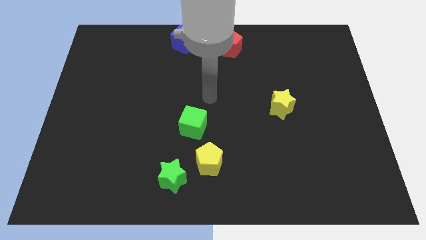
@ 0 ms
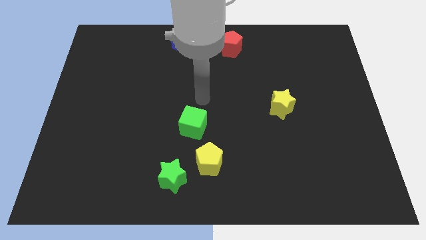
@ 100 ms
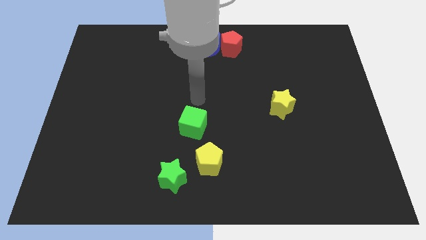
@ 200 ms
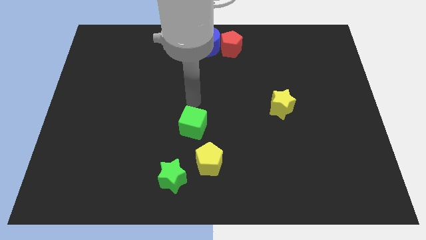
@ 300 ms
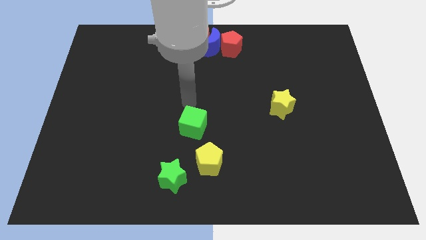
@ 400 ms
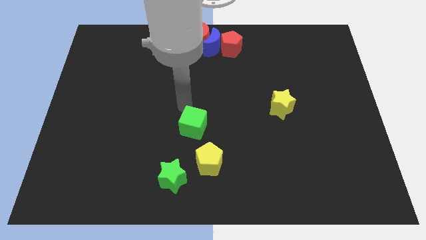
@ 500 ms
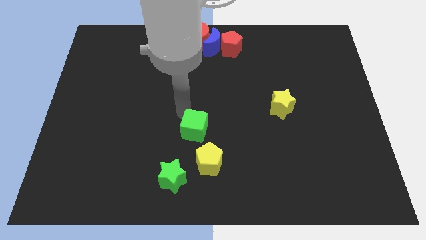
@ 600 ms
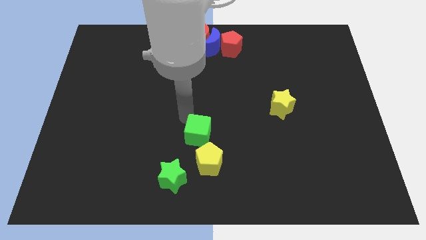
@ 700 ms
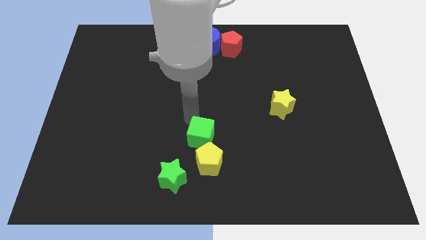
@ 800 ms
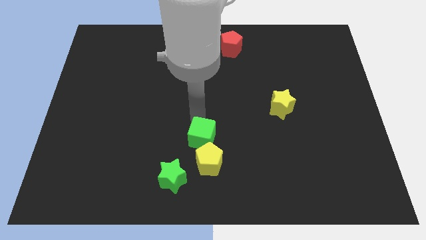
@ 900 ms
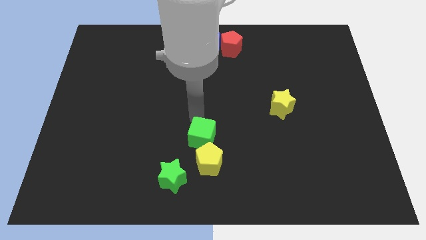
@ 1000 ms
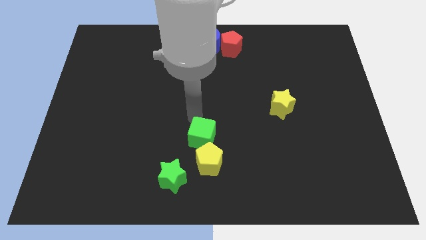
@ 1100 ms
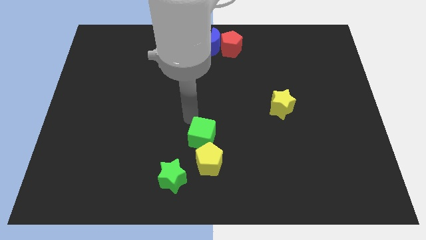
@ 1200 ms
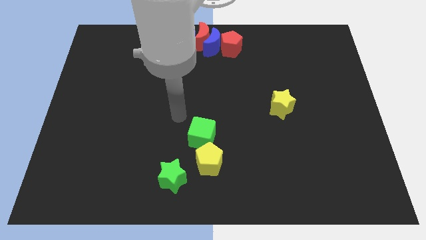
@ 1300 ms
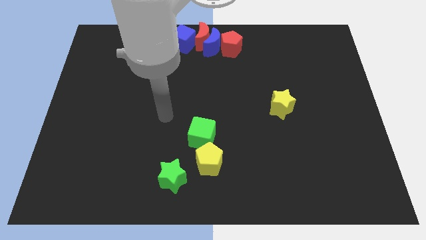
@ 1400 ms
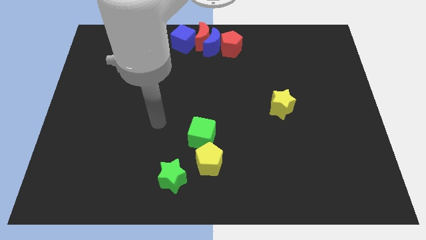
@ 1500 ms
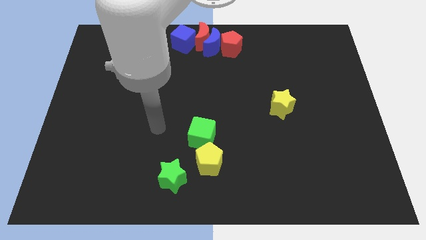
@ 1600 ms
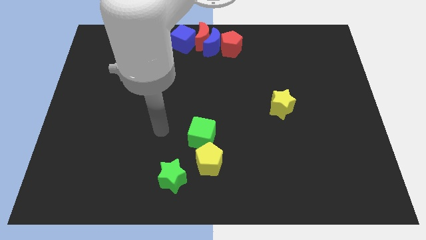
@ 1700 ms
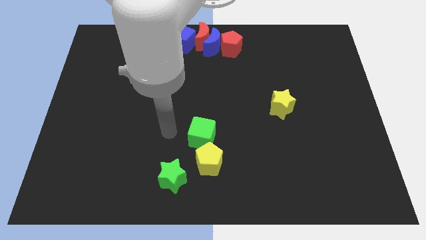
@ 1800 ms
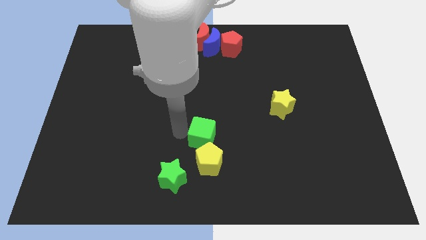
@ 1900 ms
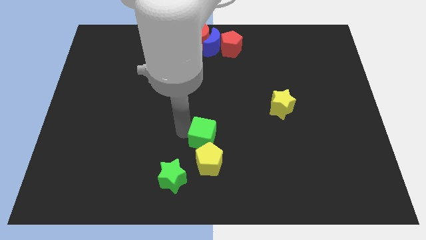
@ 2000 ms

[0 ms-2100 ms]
move green cube into yellow pentagon

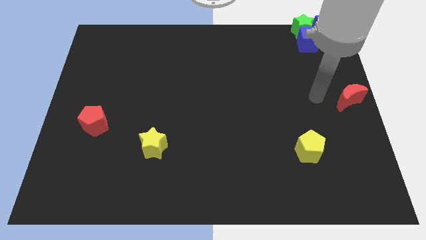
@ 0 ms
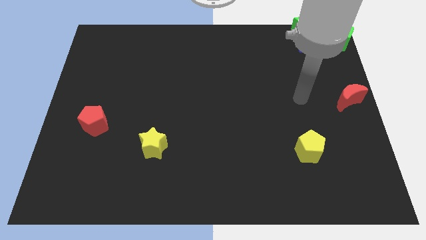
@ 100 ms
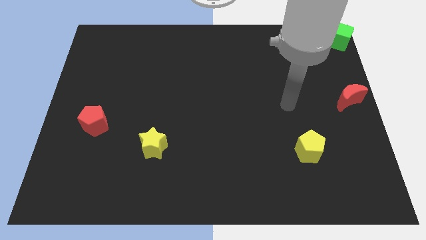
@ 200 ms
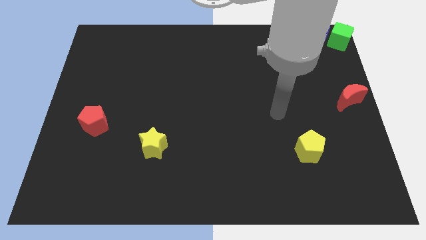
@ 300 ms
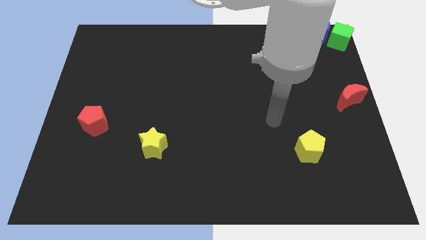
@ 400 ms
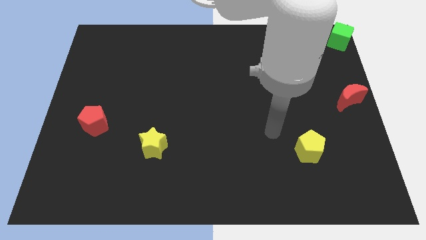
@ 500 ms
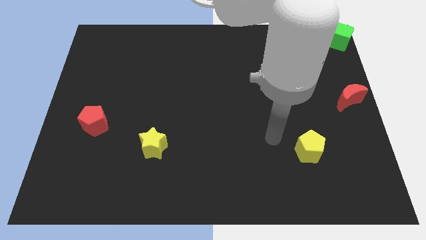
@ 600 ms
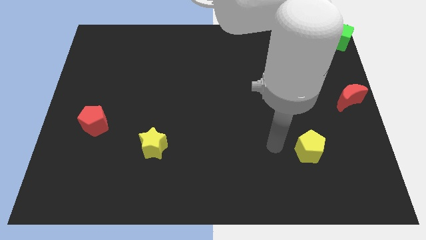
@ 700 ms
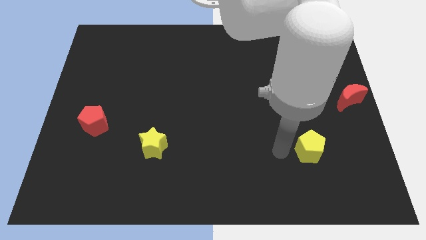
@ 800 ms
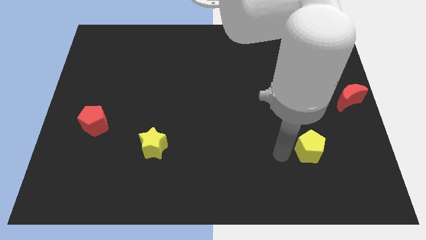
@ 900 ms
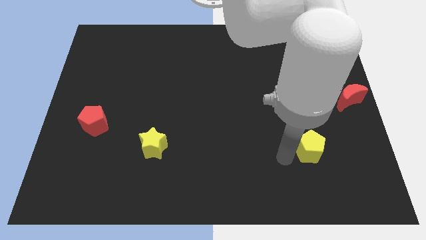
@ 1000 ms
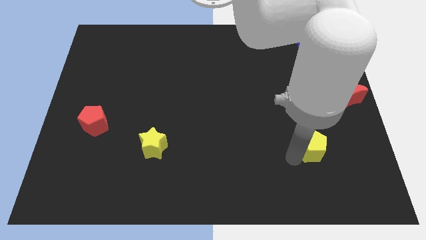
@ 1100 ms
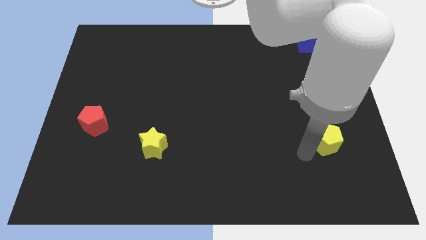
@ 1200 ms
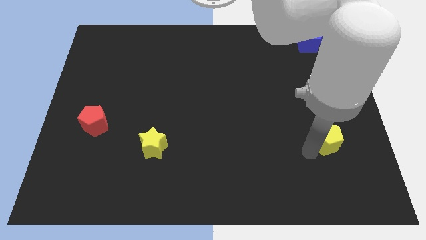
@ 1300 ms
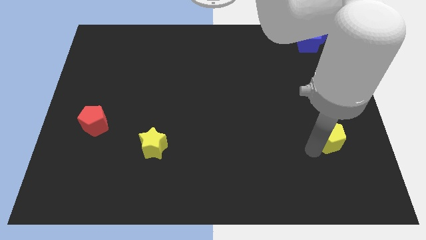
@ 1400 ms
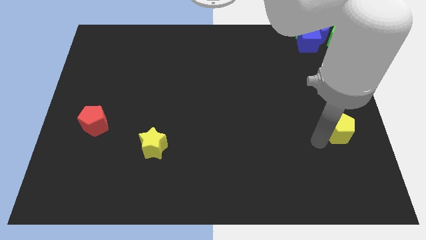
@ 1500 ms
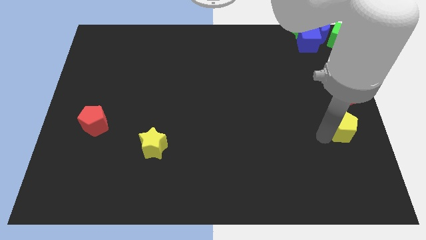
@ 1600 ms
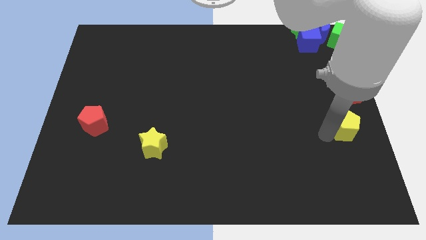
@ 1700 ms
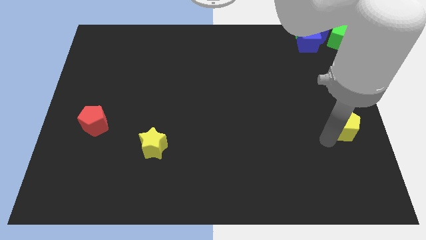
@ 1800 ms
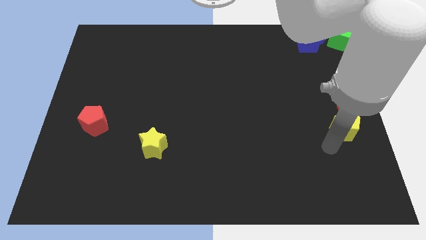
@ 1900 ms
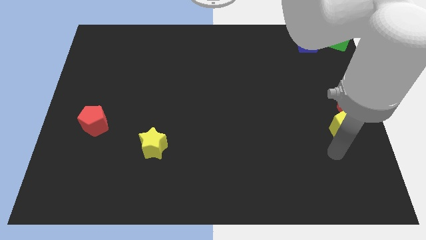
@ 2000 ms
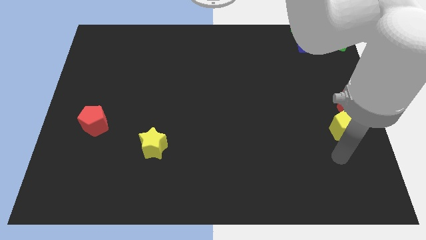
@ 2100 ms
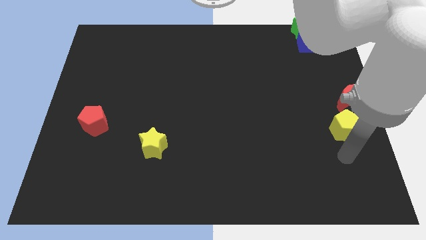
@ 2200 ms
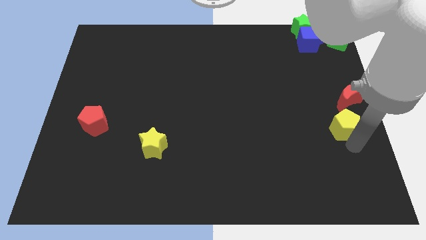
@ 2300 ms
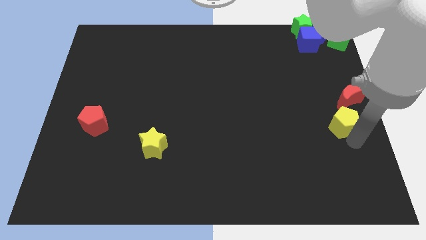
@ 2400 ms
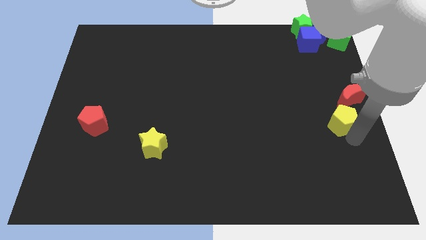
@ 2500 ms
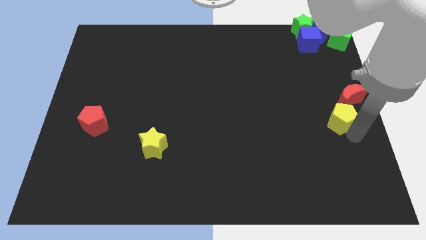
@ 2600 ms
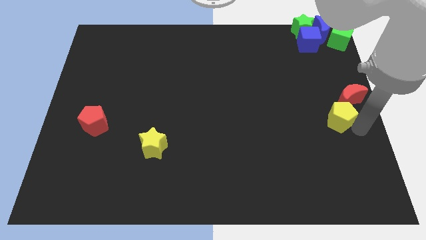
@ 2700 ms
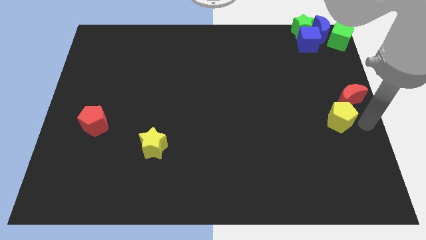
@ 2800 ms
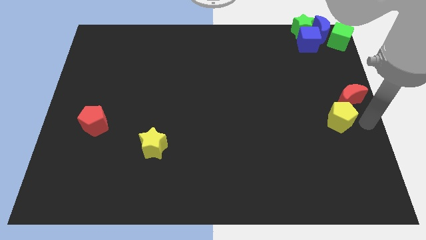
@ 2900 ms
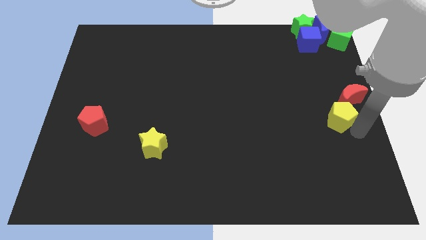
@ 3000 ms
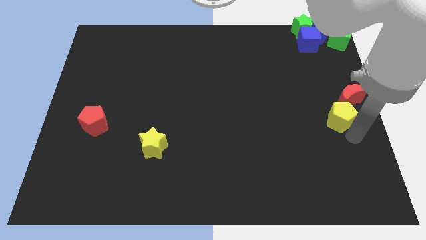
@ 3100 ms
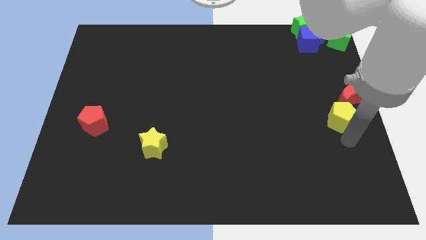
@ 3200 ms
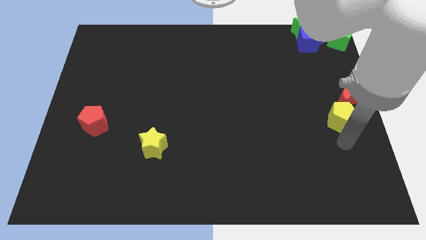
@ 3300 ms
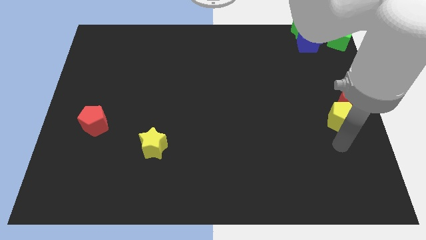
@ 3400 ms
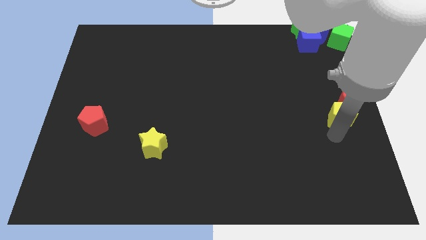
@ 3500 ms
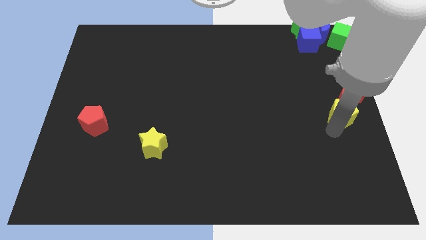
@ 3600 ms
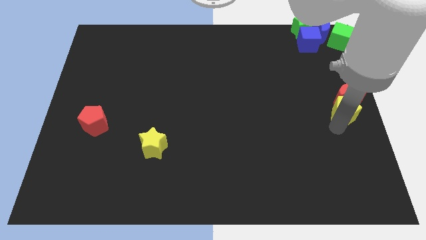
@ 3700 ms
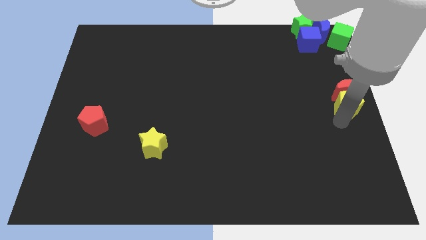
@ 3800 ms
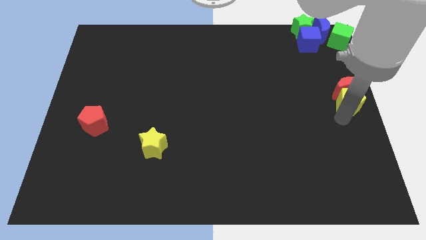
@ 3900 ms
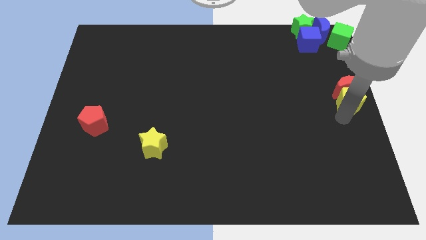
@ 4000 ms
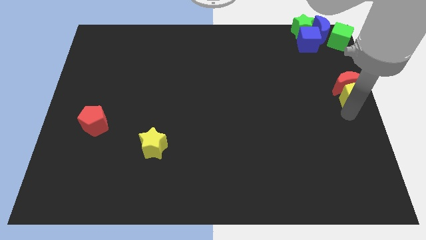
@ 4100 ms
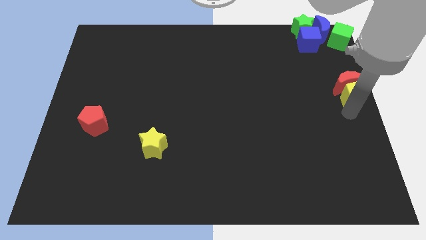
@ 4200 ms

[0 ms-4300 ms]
push yellow pentagon into red crescent

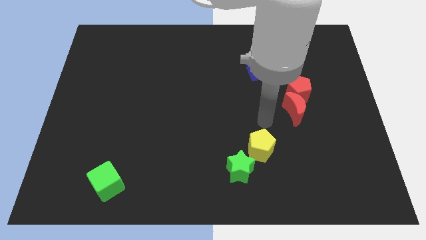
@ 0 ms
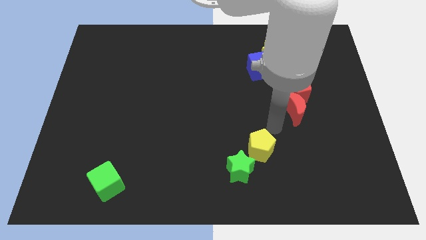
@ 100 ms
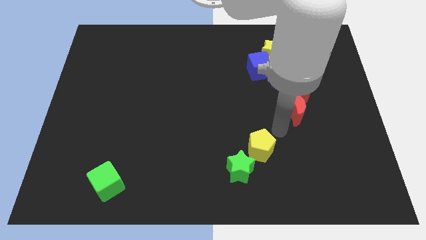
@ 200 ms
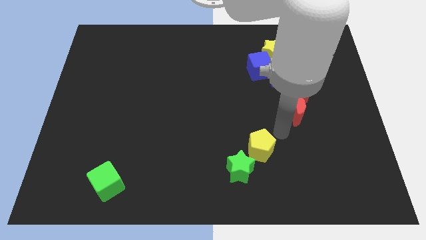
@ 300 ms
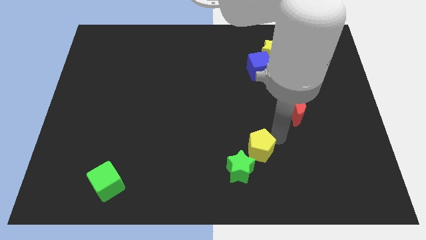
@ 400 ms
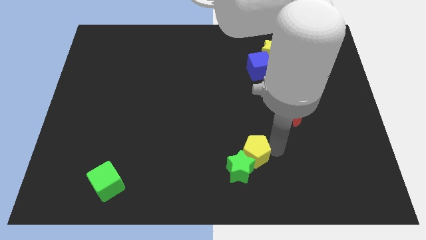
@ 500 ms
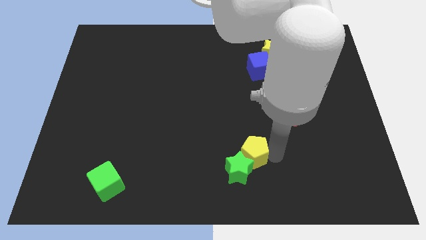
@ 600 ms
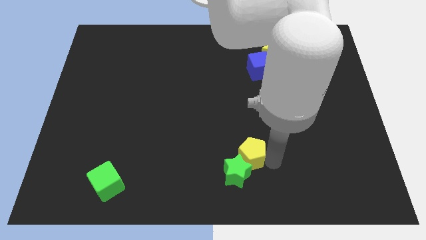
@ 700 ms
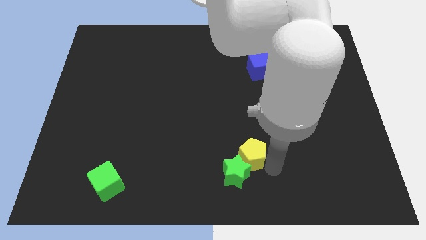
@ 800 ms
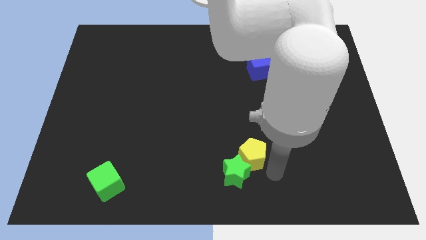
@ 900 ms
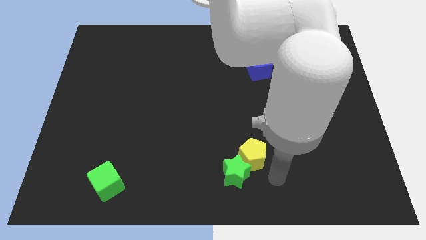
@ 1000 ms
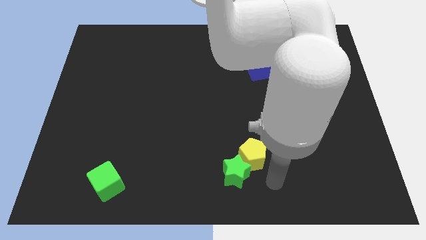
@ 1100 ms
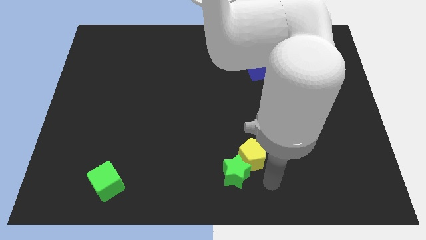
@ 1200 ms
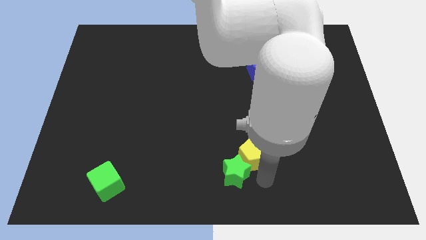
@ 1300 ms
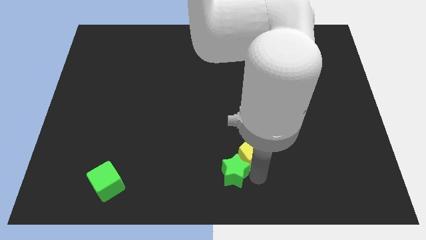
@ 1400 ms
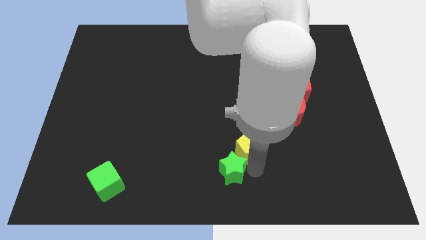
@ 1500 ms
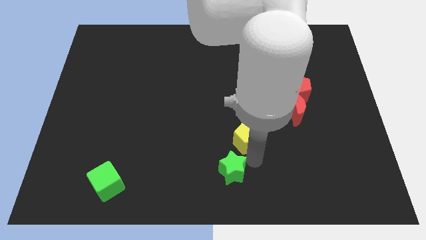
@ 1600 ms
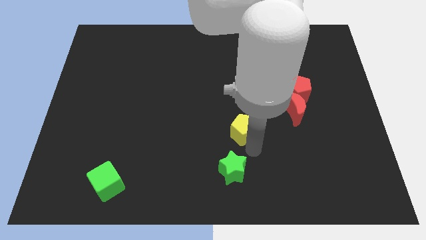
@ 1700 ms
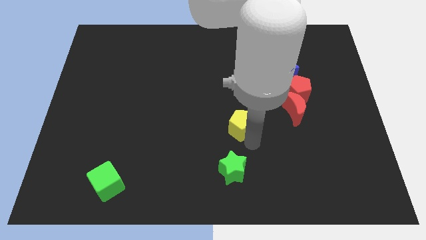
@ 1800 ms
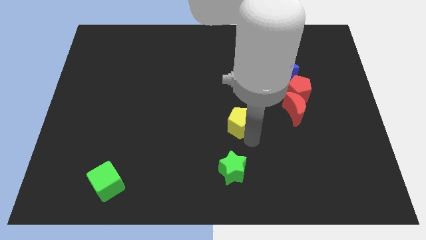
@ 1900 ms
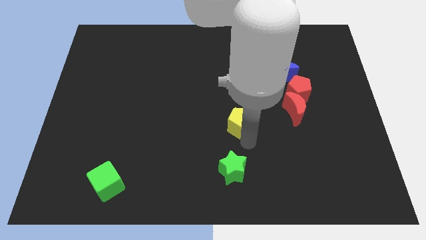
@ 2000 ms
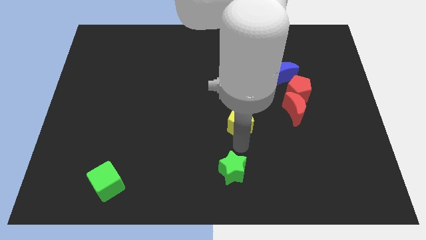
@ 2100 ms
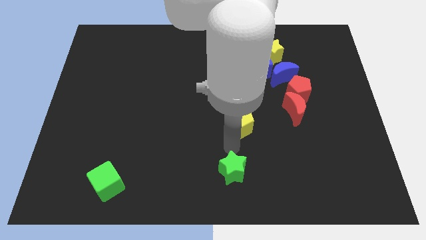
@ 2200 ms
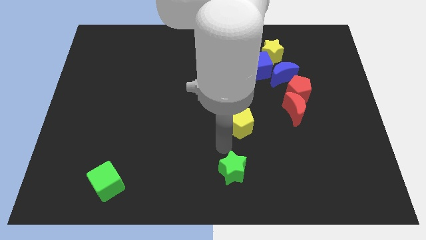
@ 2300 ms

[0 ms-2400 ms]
move the yellow pentagon to the center

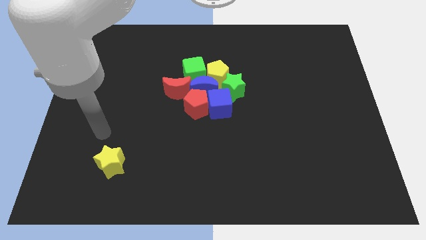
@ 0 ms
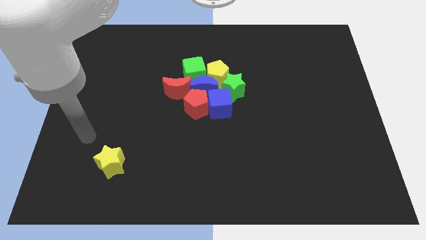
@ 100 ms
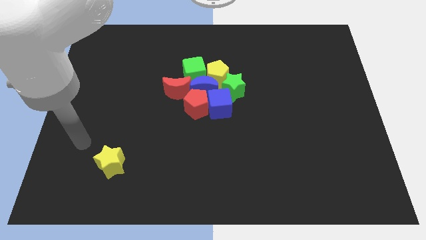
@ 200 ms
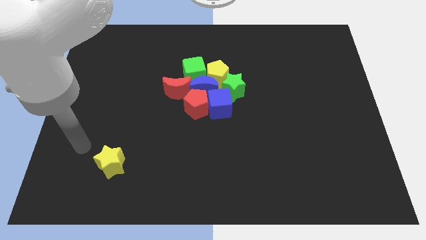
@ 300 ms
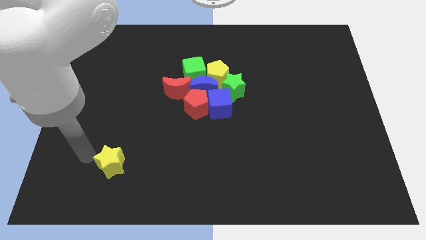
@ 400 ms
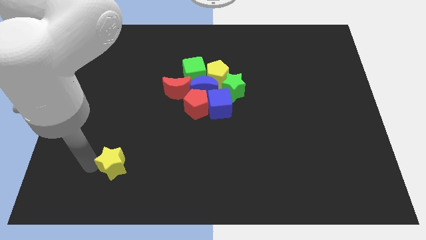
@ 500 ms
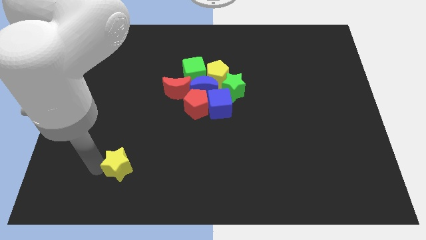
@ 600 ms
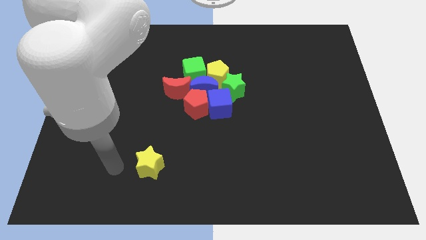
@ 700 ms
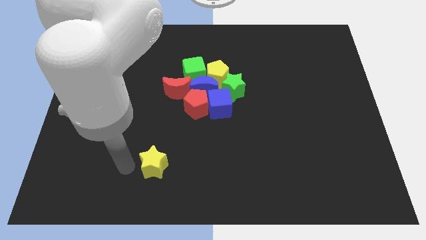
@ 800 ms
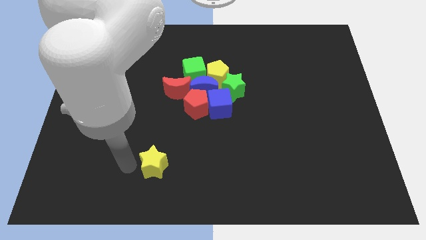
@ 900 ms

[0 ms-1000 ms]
push yellow star below red crescent
